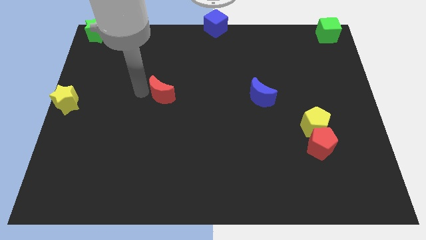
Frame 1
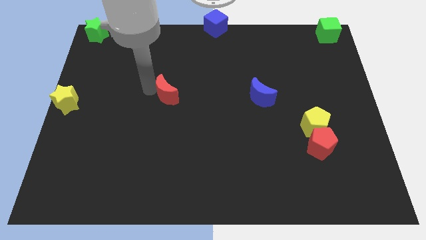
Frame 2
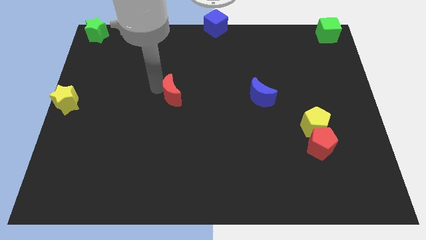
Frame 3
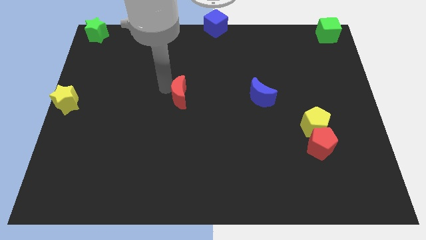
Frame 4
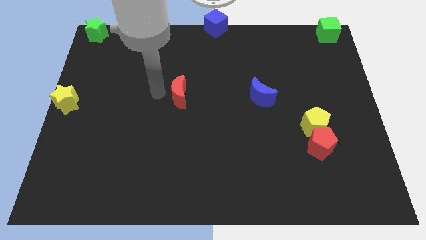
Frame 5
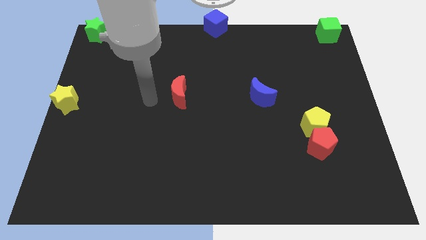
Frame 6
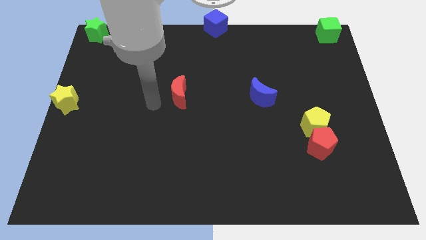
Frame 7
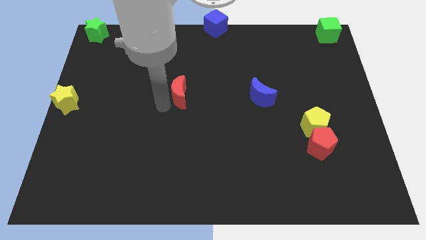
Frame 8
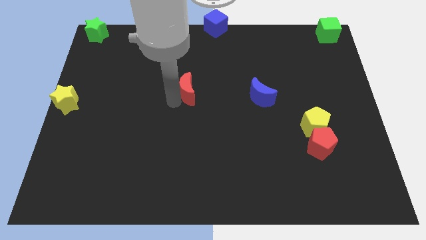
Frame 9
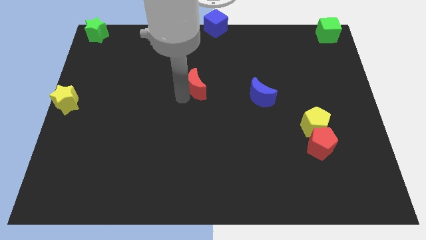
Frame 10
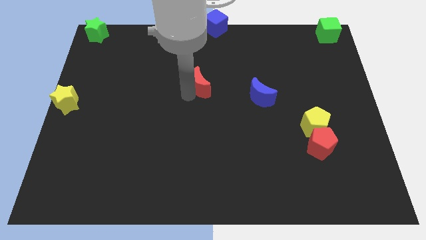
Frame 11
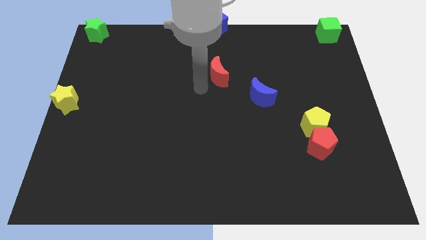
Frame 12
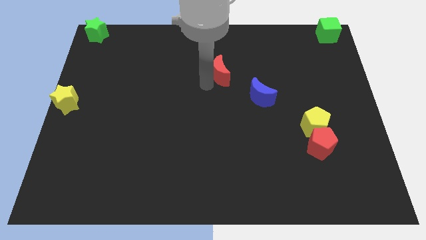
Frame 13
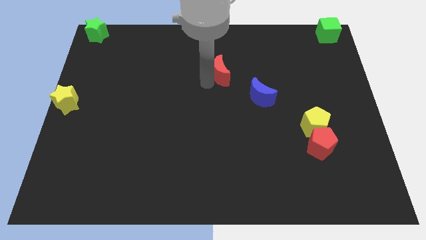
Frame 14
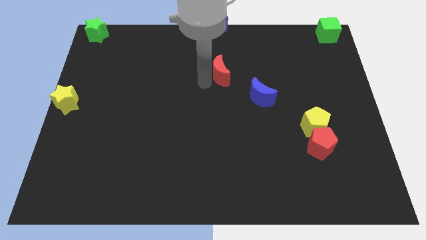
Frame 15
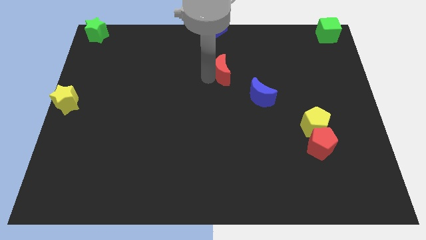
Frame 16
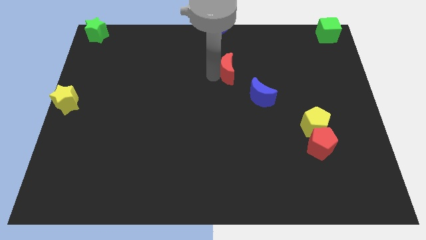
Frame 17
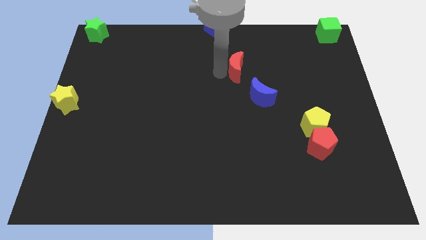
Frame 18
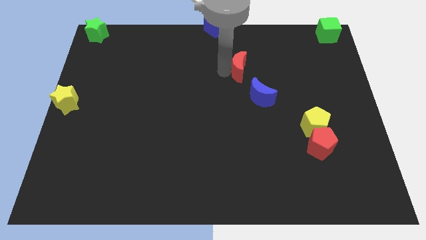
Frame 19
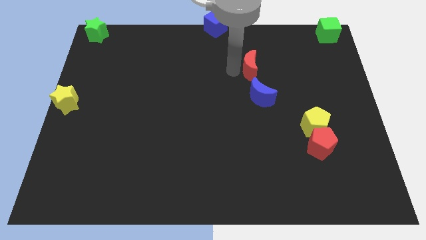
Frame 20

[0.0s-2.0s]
place the red moon above the blue moon

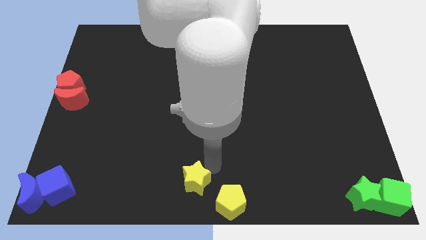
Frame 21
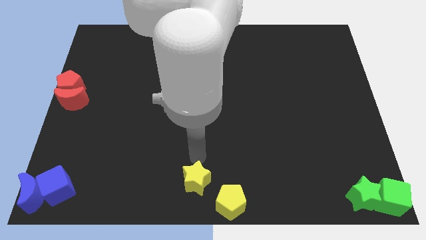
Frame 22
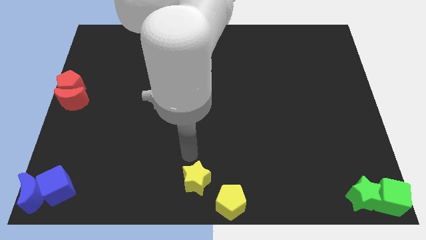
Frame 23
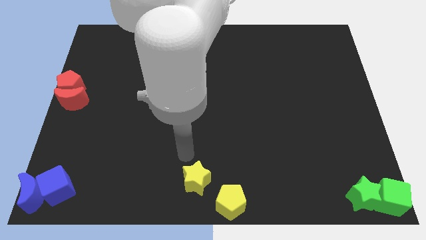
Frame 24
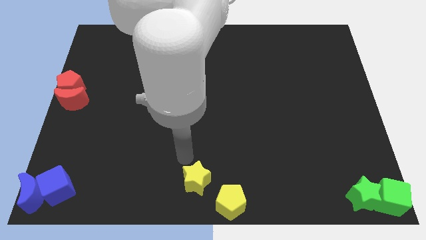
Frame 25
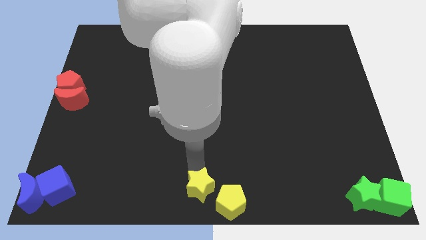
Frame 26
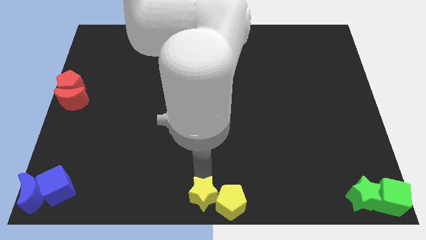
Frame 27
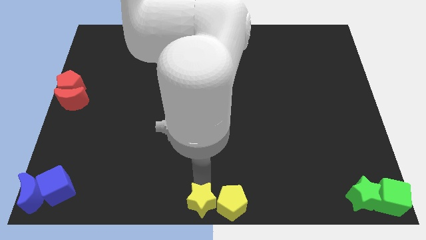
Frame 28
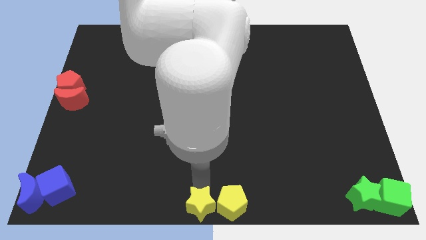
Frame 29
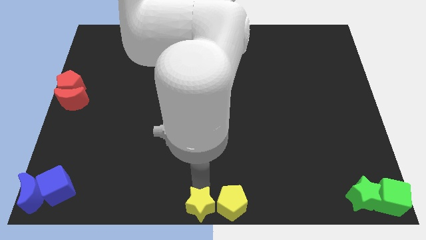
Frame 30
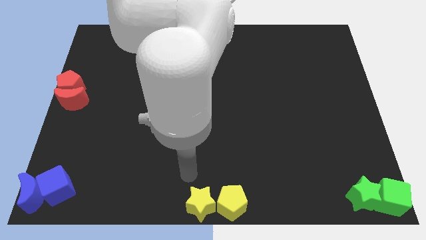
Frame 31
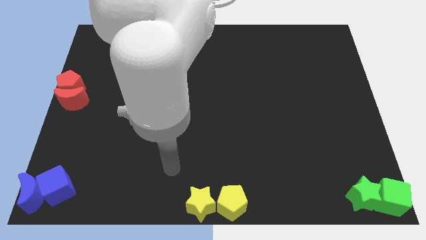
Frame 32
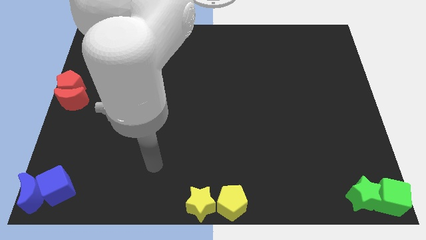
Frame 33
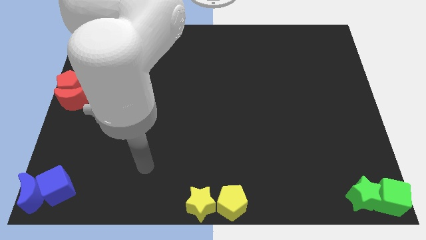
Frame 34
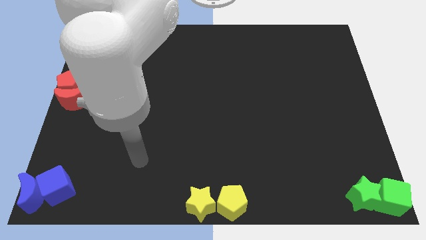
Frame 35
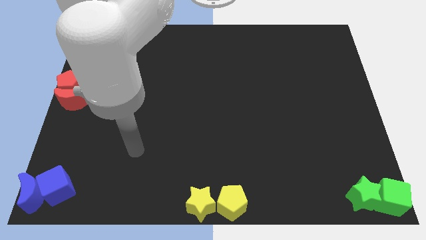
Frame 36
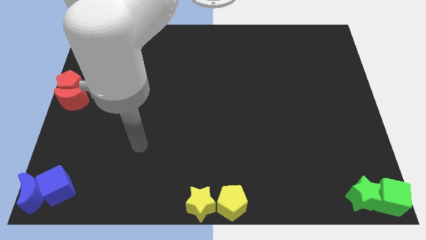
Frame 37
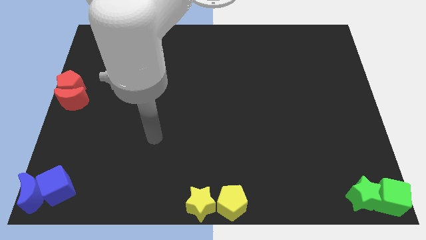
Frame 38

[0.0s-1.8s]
push the yellow star to the bottom center of the board

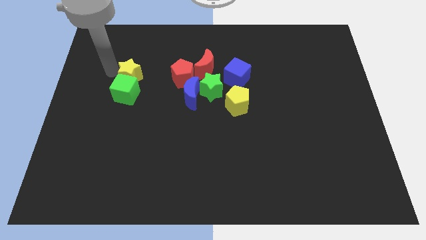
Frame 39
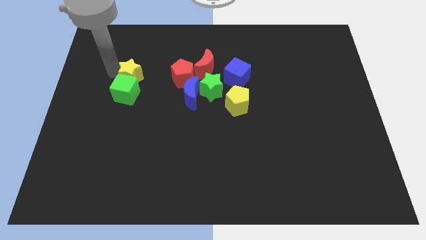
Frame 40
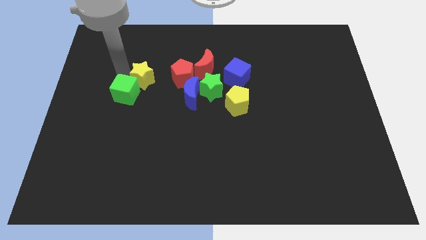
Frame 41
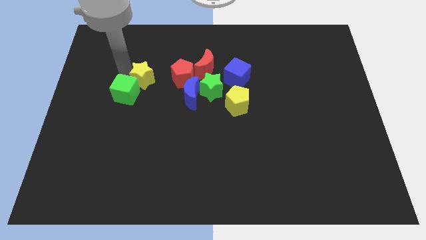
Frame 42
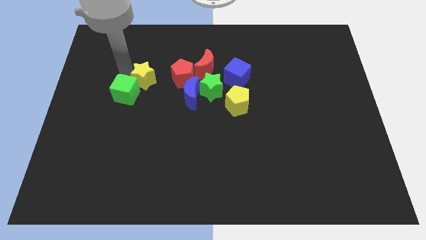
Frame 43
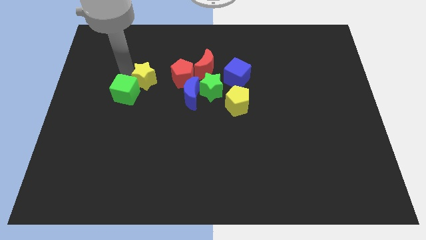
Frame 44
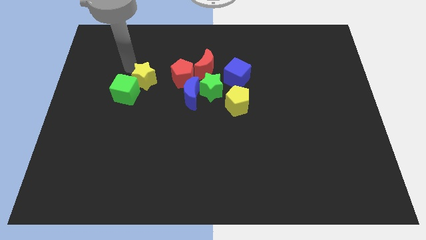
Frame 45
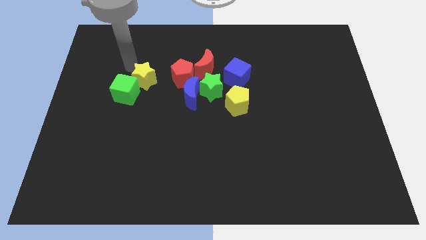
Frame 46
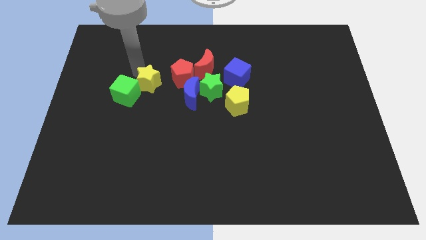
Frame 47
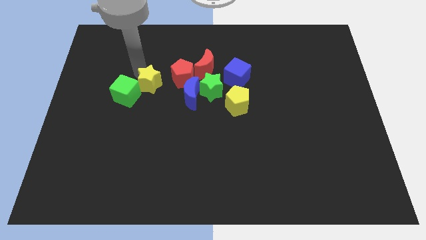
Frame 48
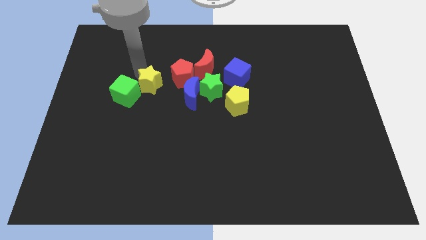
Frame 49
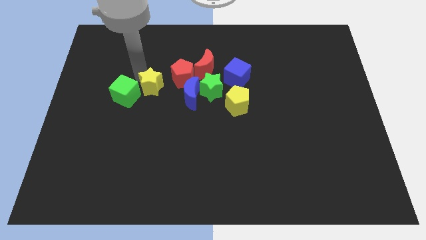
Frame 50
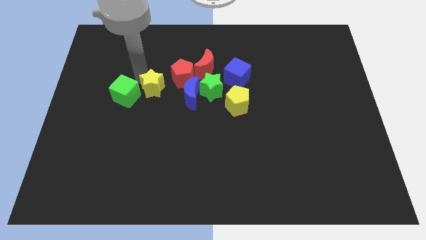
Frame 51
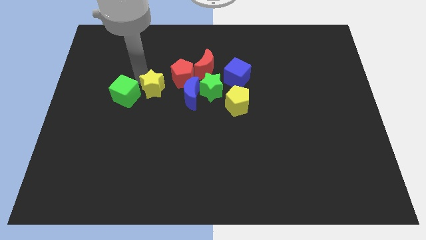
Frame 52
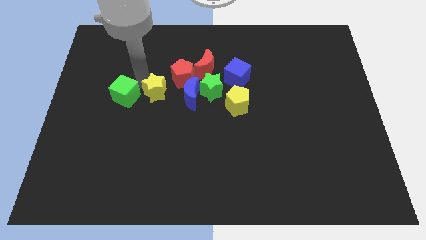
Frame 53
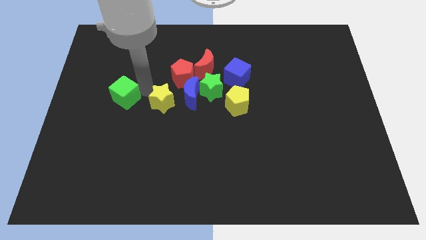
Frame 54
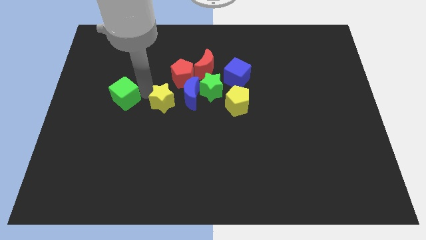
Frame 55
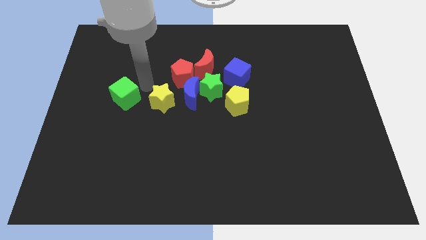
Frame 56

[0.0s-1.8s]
separate the yellow star from the green cube

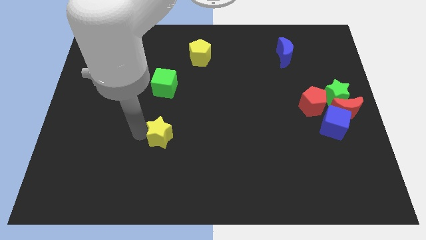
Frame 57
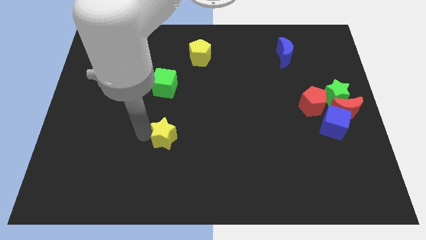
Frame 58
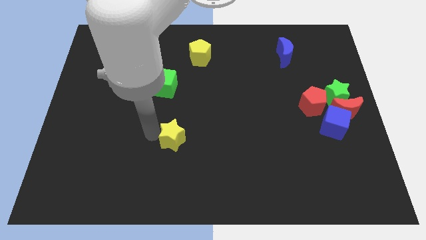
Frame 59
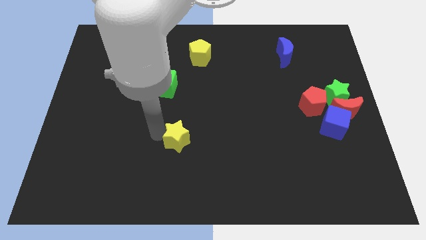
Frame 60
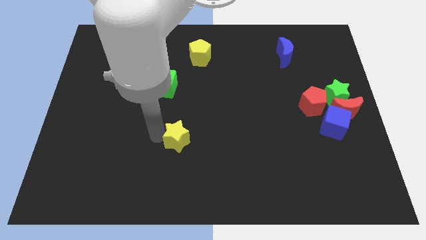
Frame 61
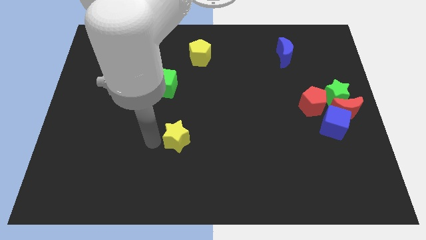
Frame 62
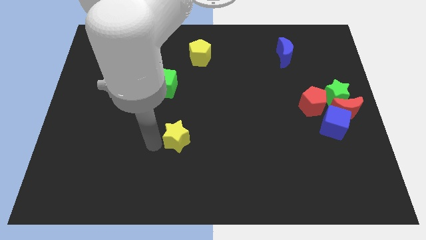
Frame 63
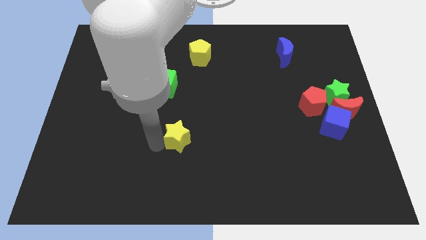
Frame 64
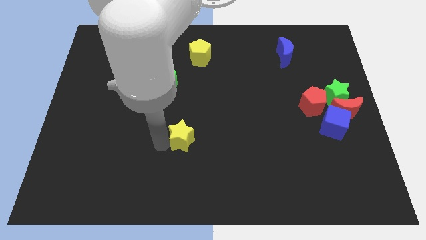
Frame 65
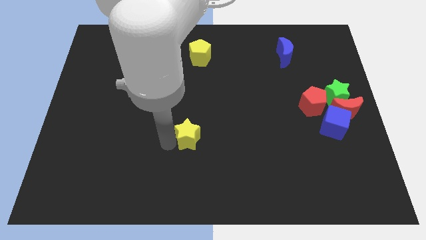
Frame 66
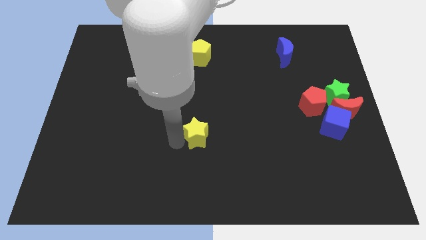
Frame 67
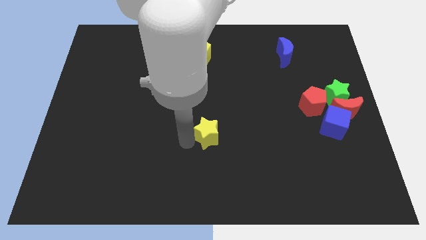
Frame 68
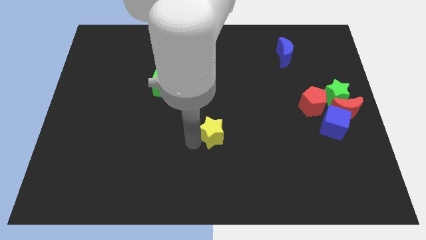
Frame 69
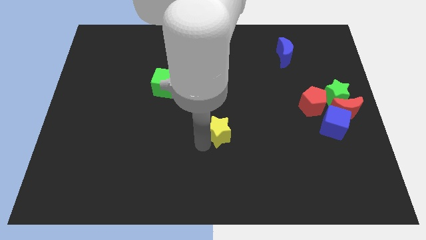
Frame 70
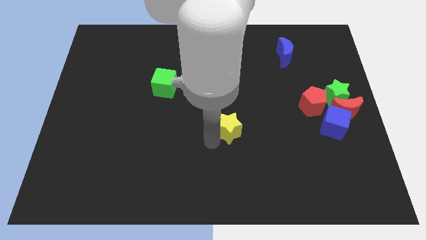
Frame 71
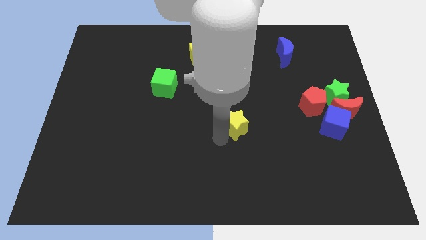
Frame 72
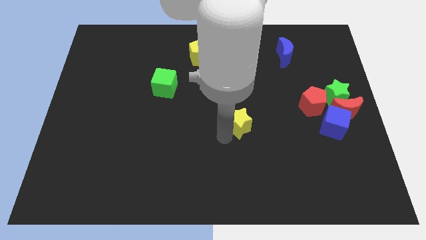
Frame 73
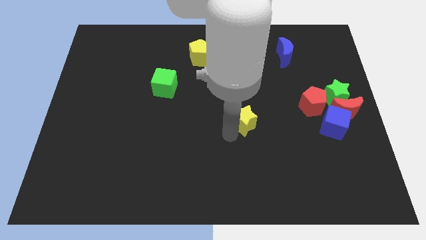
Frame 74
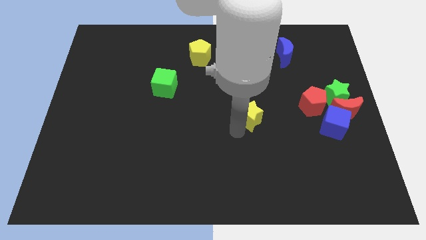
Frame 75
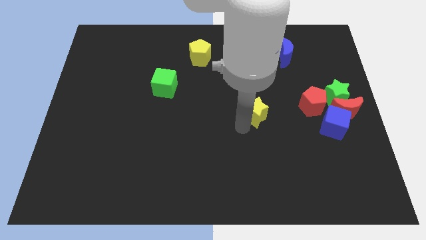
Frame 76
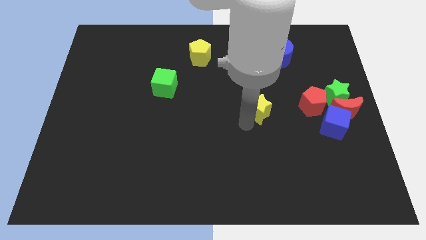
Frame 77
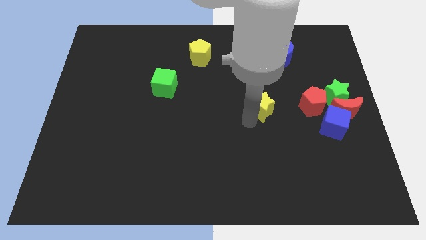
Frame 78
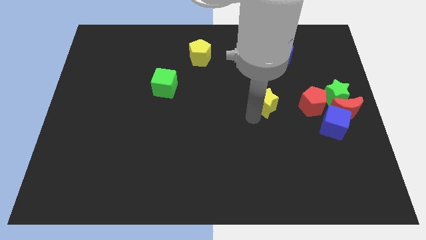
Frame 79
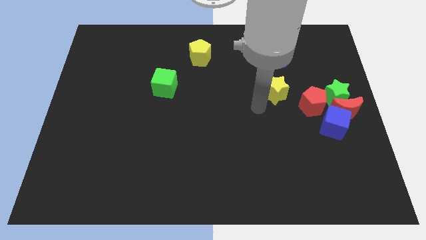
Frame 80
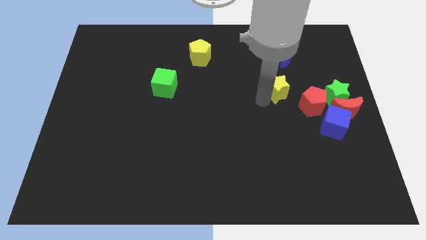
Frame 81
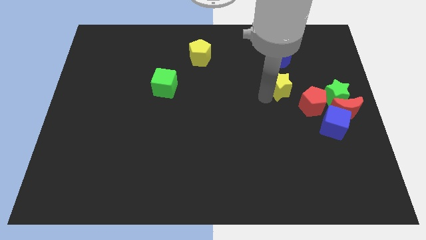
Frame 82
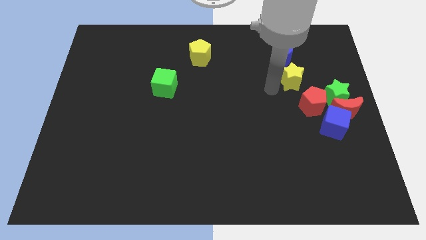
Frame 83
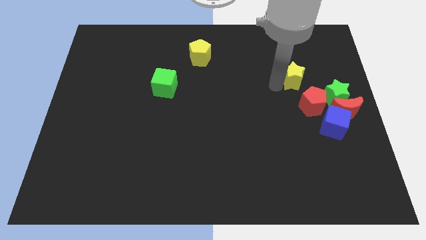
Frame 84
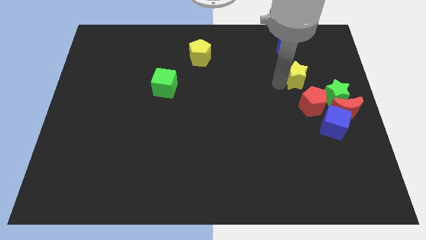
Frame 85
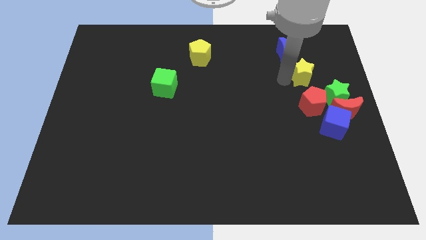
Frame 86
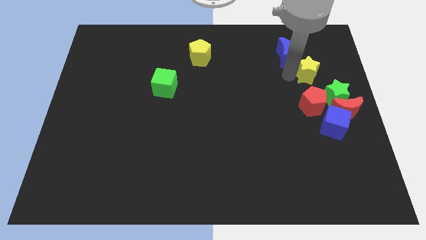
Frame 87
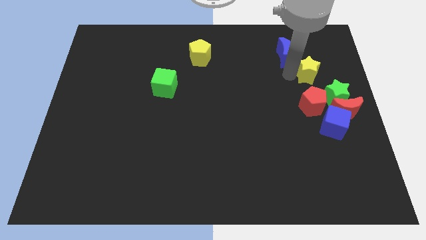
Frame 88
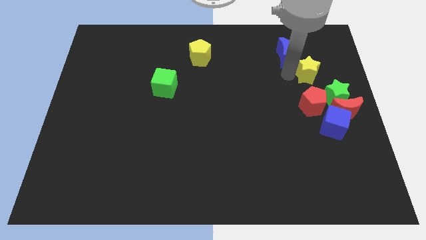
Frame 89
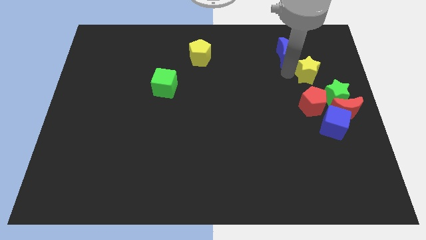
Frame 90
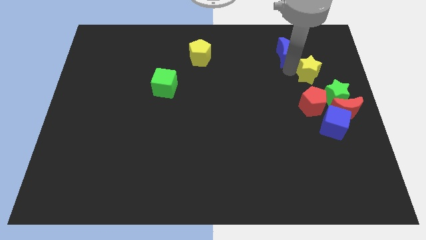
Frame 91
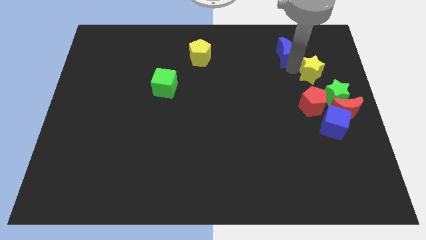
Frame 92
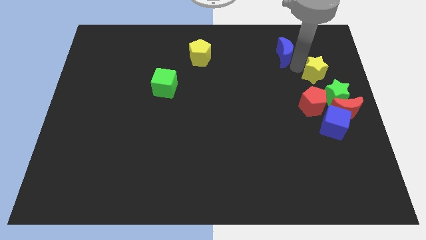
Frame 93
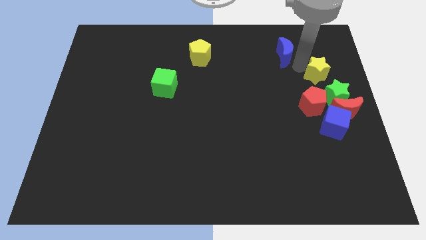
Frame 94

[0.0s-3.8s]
place the yellow star at the top of the red pentagon
